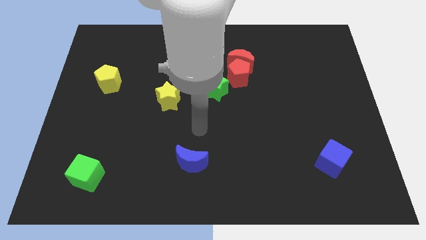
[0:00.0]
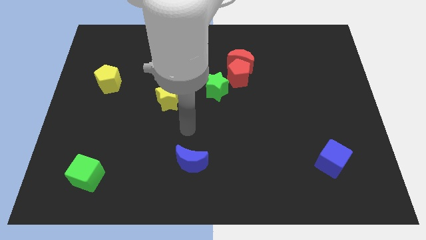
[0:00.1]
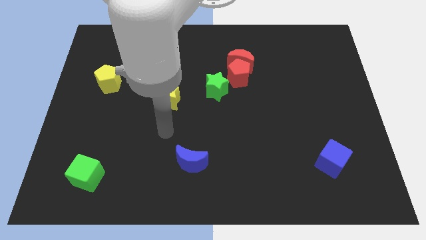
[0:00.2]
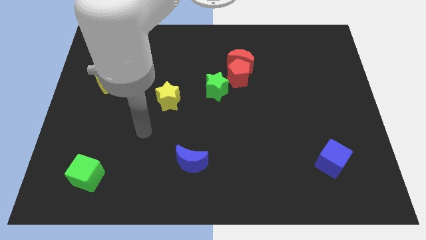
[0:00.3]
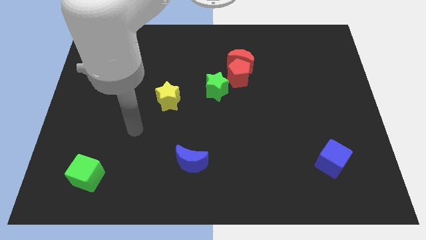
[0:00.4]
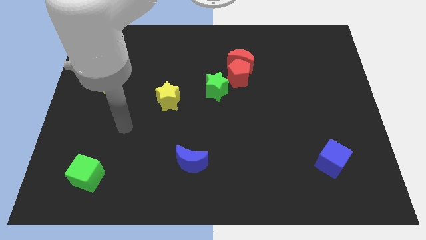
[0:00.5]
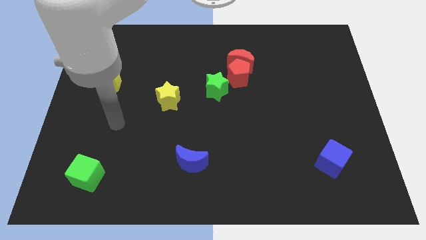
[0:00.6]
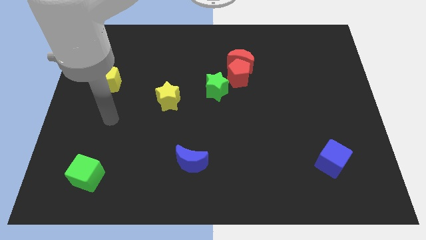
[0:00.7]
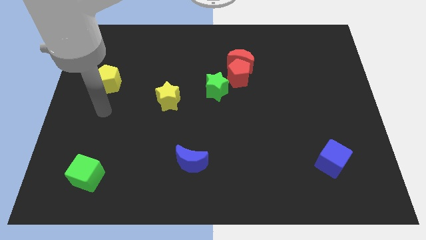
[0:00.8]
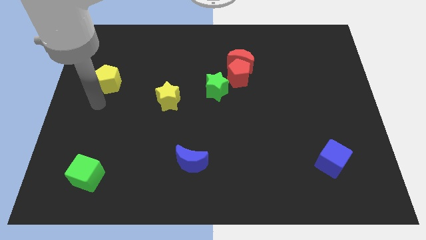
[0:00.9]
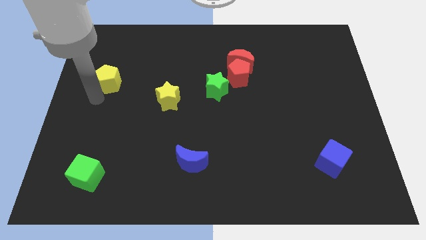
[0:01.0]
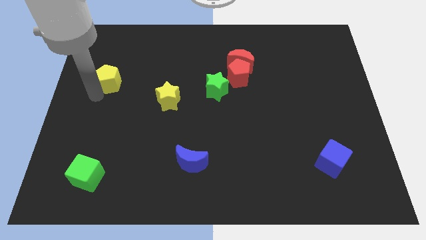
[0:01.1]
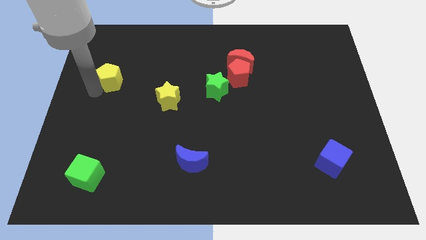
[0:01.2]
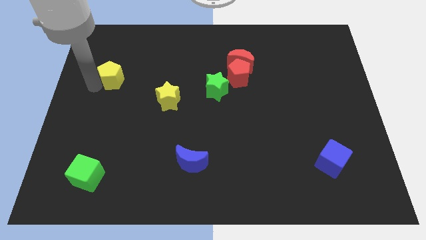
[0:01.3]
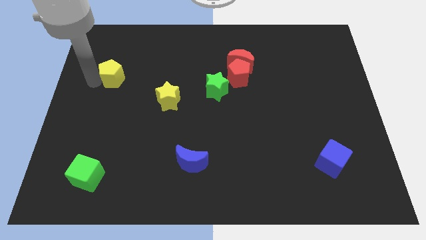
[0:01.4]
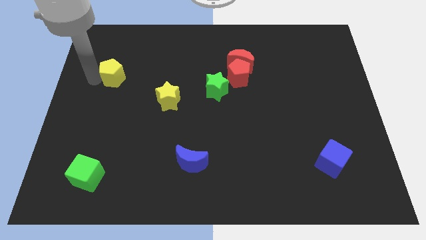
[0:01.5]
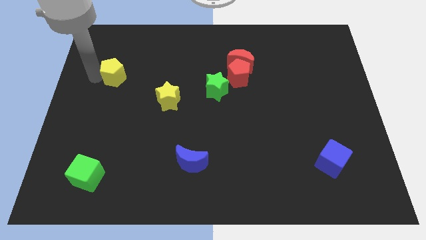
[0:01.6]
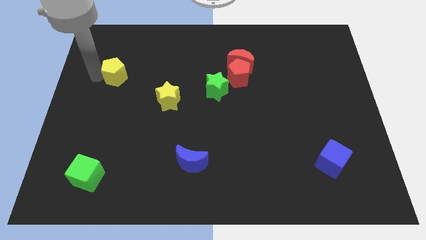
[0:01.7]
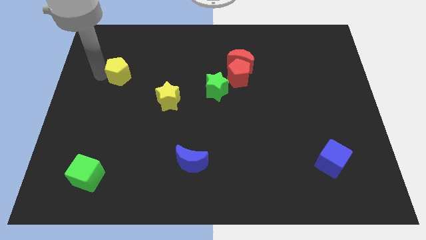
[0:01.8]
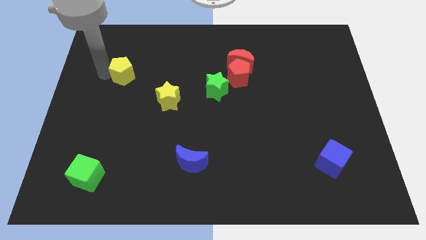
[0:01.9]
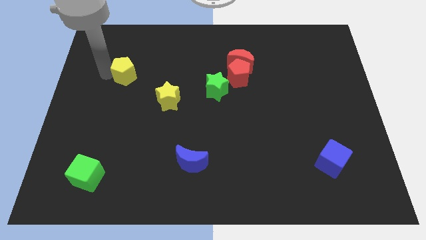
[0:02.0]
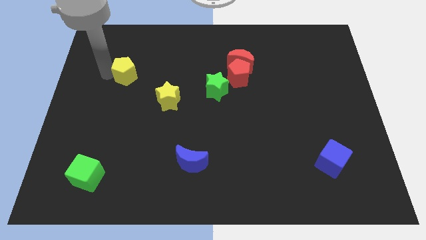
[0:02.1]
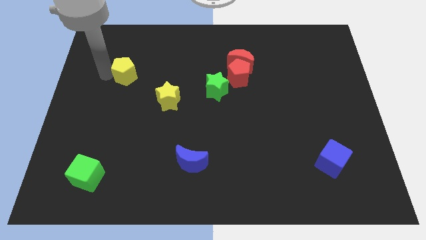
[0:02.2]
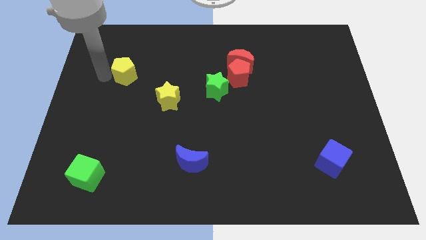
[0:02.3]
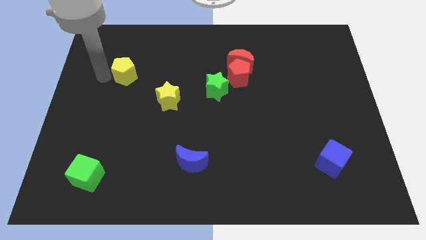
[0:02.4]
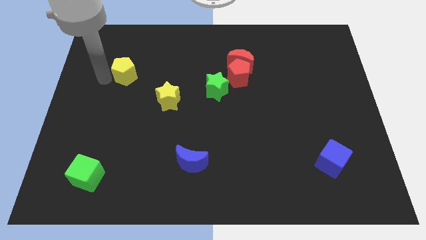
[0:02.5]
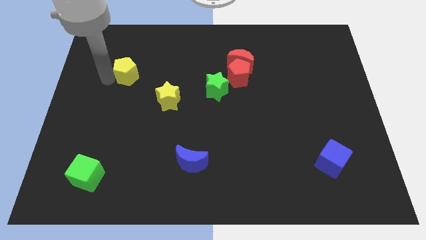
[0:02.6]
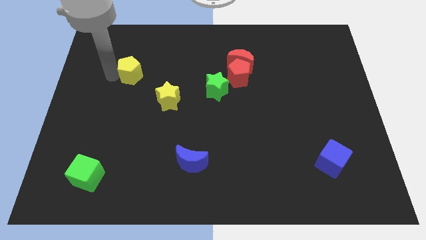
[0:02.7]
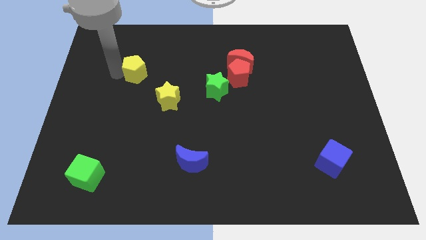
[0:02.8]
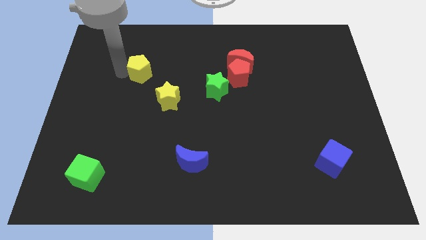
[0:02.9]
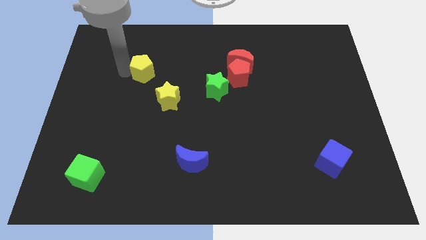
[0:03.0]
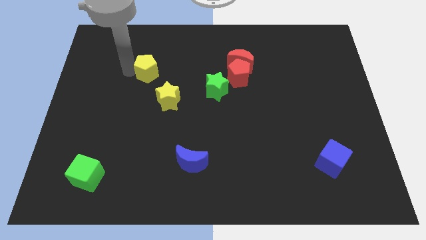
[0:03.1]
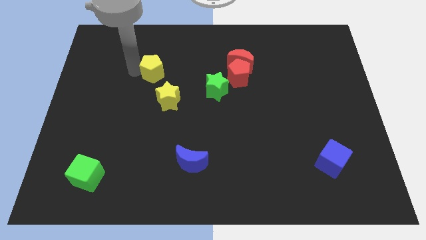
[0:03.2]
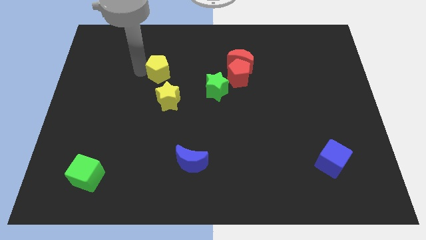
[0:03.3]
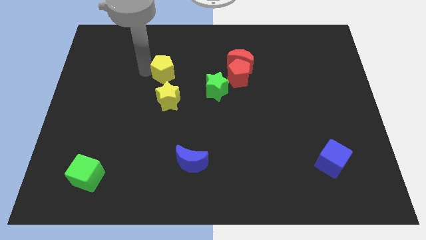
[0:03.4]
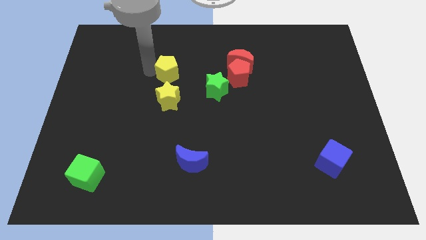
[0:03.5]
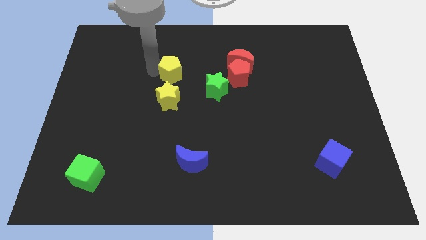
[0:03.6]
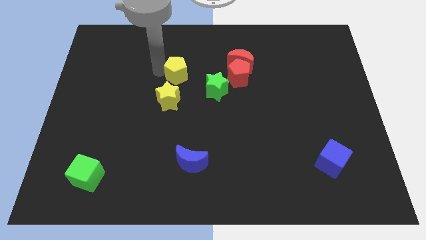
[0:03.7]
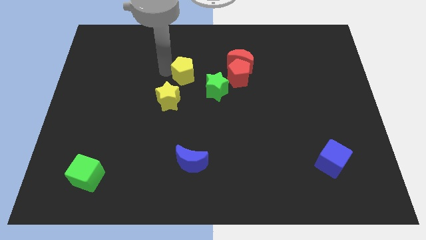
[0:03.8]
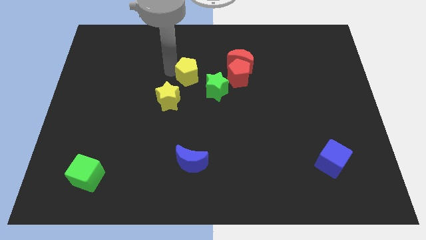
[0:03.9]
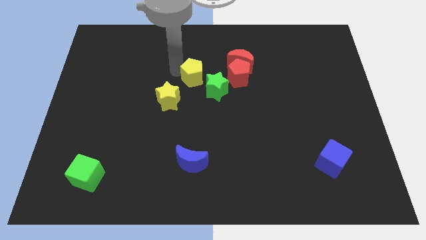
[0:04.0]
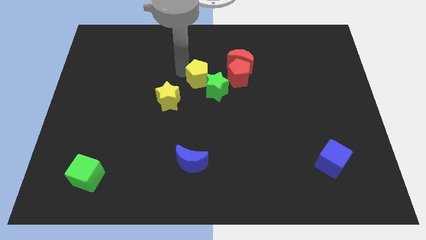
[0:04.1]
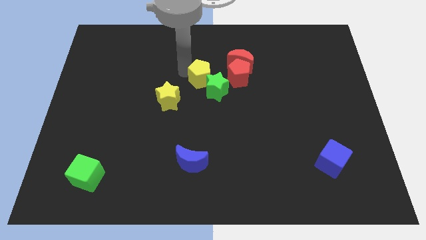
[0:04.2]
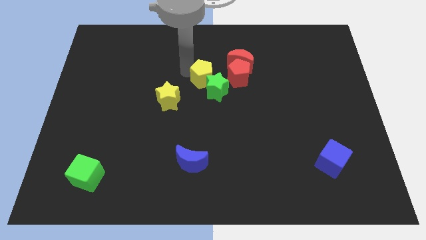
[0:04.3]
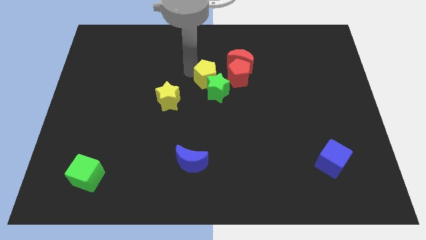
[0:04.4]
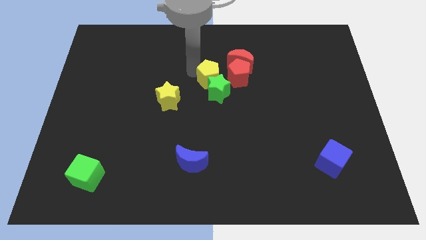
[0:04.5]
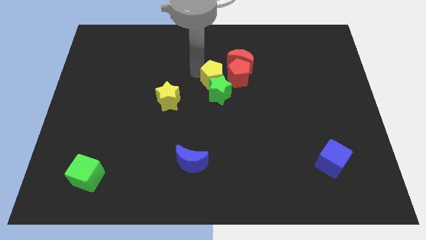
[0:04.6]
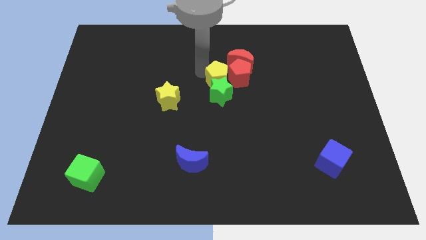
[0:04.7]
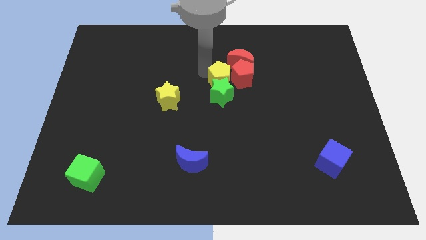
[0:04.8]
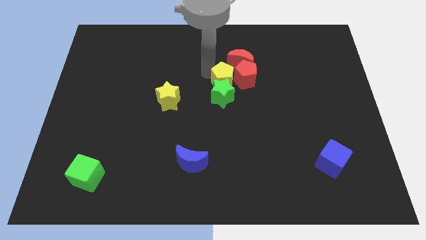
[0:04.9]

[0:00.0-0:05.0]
push the yellow pentagon next to the red pentagon

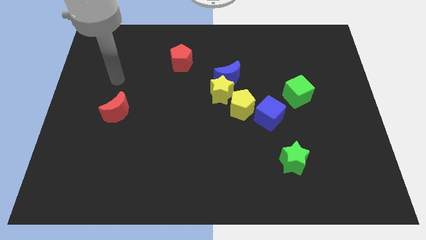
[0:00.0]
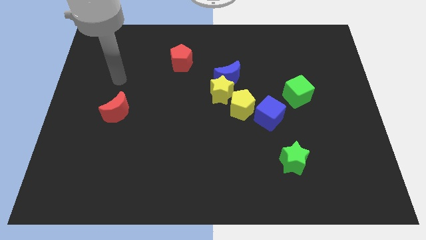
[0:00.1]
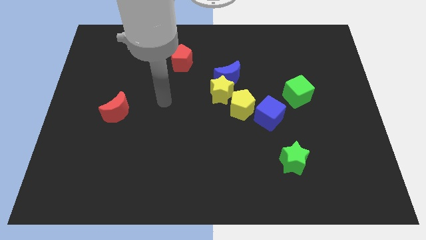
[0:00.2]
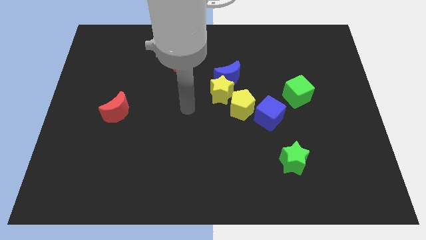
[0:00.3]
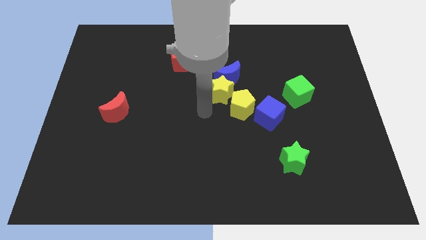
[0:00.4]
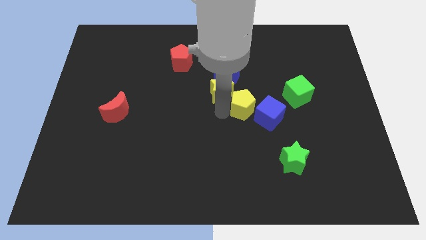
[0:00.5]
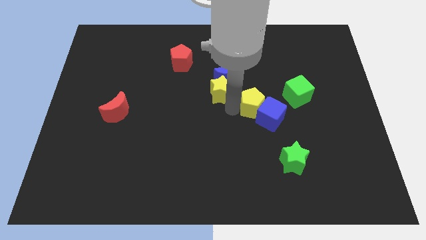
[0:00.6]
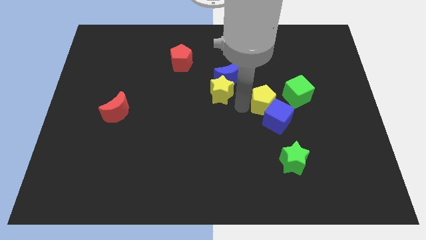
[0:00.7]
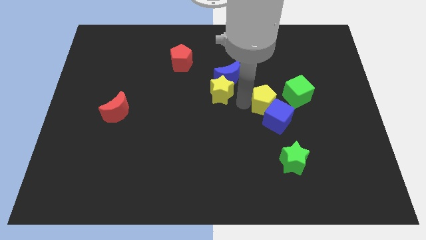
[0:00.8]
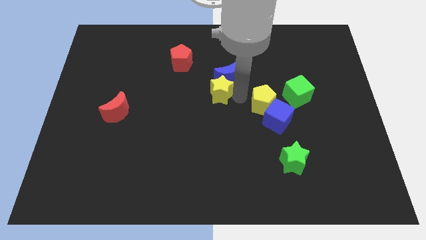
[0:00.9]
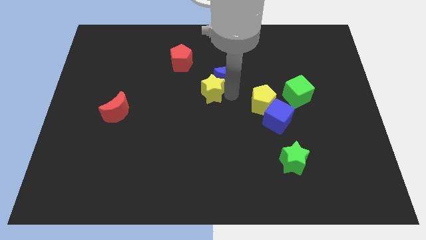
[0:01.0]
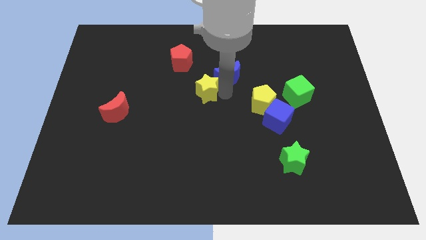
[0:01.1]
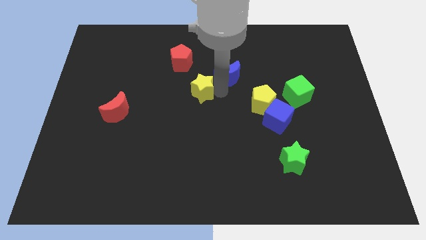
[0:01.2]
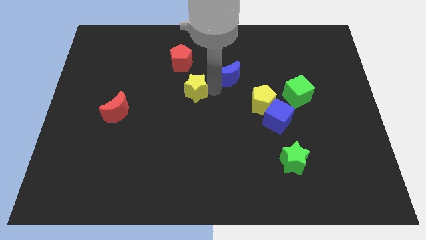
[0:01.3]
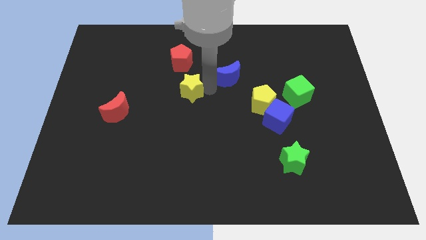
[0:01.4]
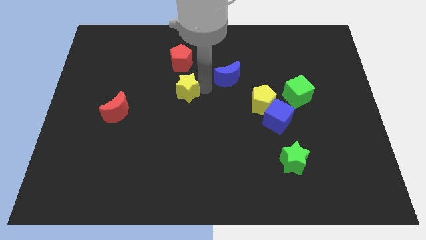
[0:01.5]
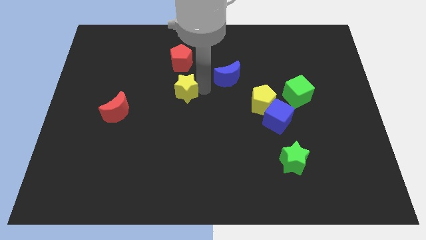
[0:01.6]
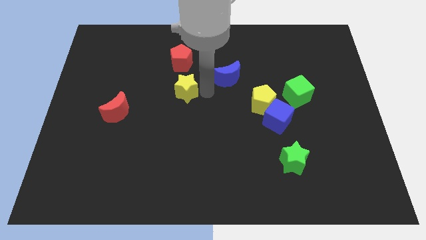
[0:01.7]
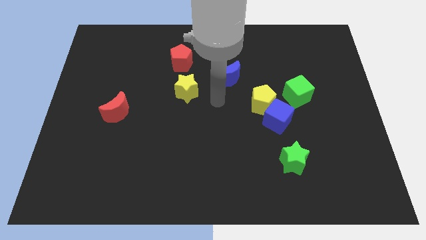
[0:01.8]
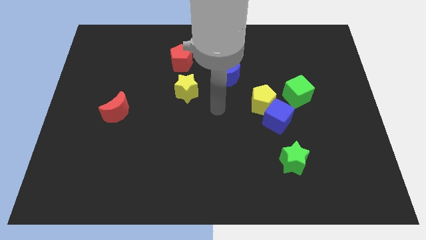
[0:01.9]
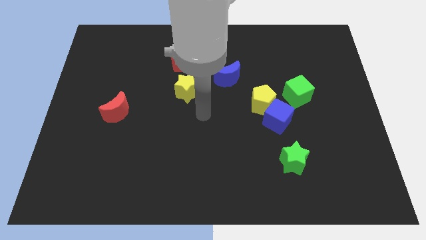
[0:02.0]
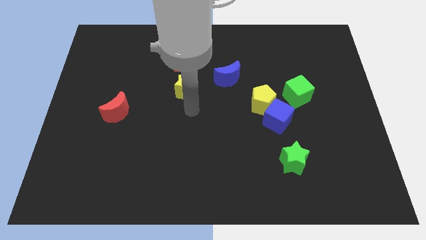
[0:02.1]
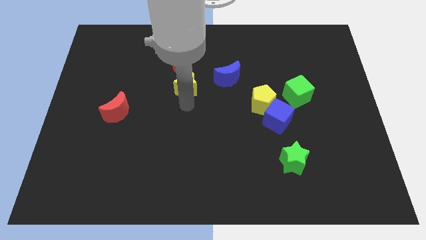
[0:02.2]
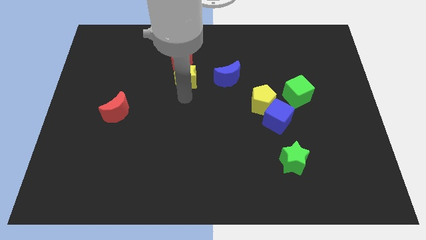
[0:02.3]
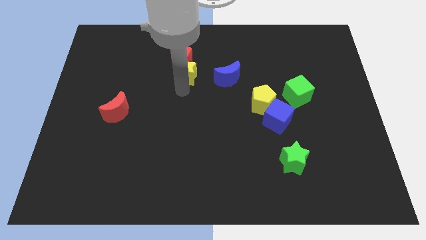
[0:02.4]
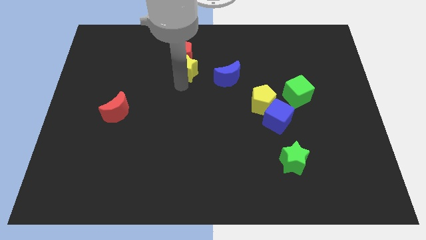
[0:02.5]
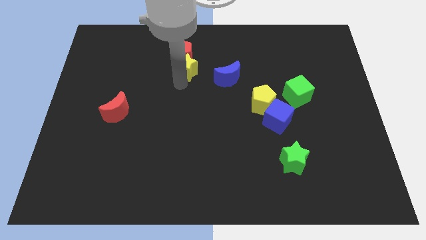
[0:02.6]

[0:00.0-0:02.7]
move the yellow star next to the red pentagon

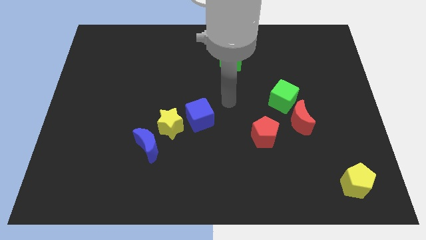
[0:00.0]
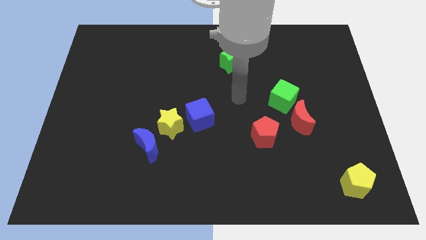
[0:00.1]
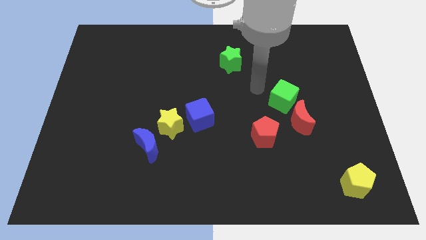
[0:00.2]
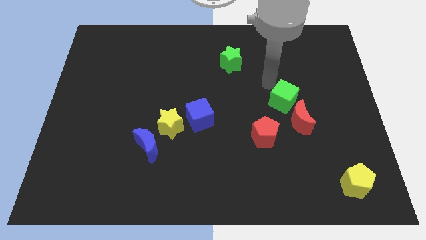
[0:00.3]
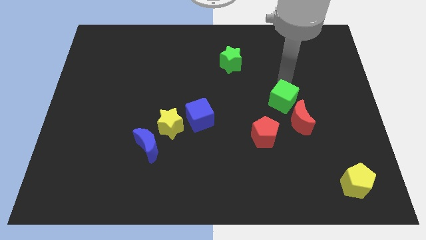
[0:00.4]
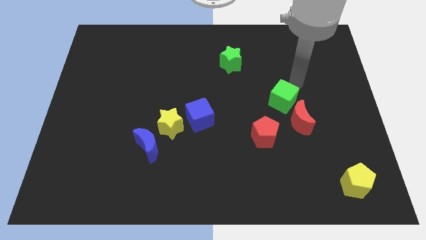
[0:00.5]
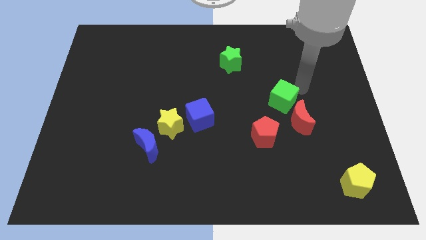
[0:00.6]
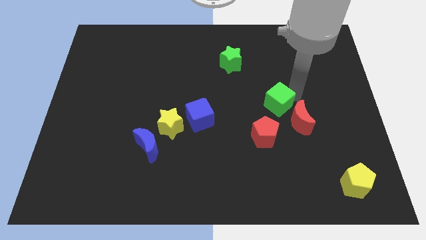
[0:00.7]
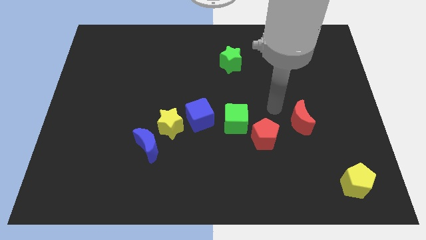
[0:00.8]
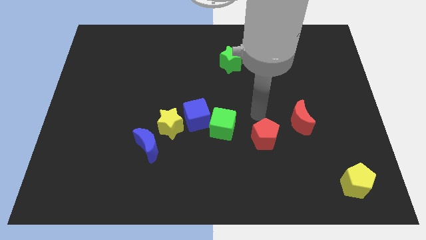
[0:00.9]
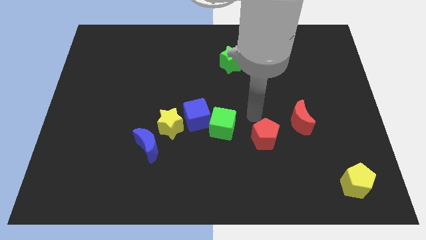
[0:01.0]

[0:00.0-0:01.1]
slide the green cube towards the blue cube
